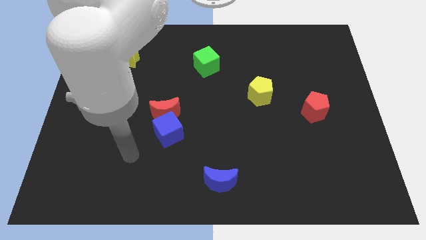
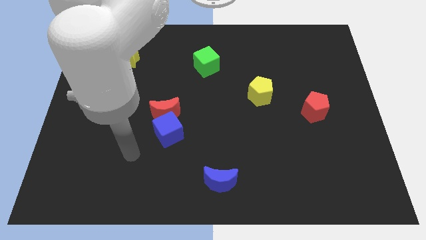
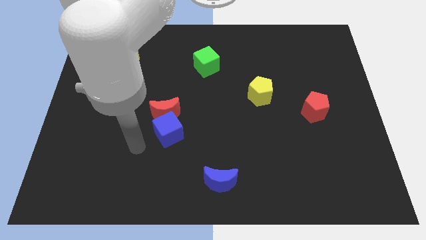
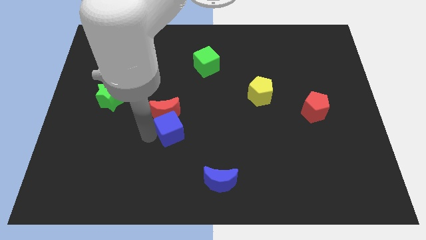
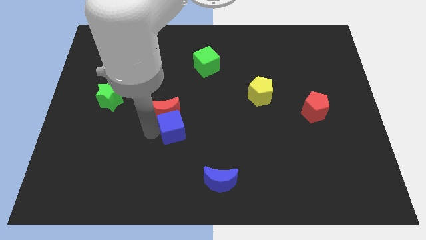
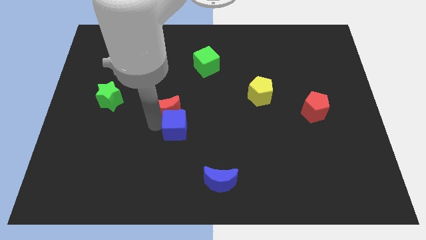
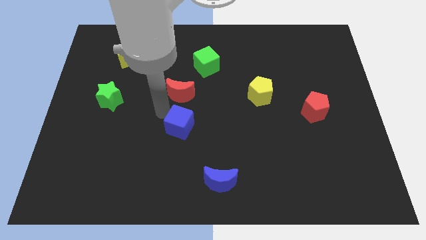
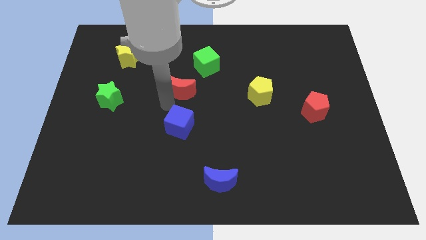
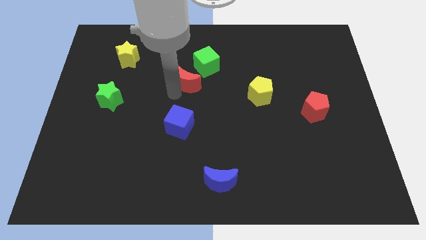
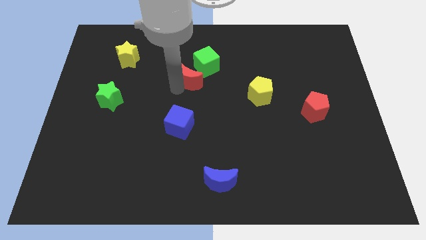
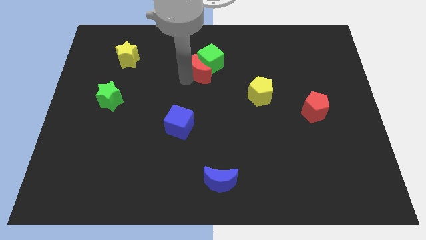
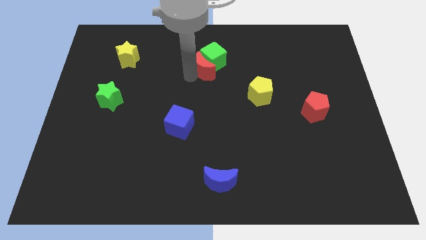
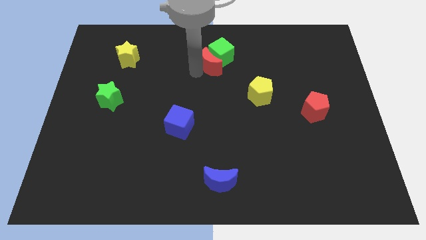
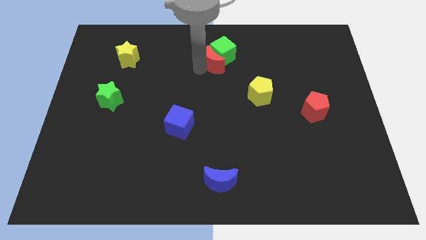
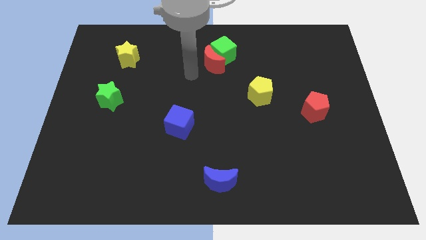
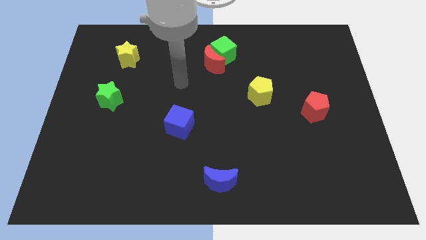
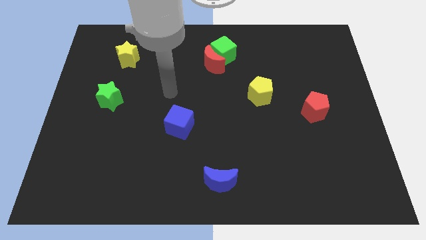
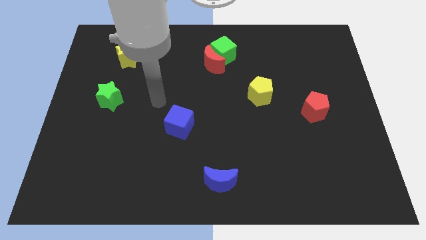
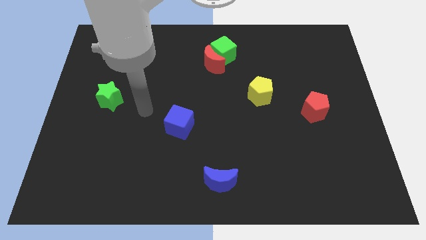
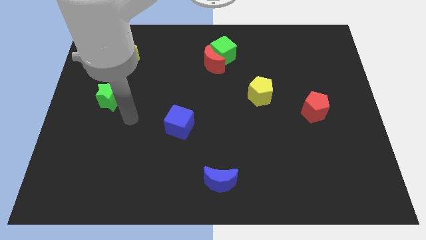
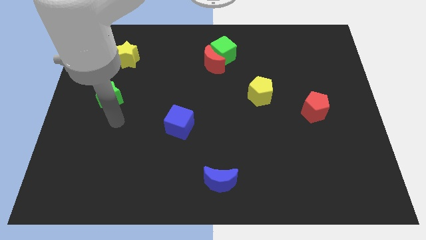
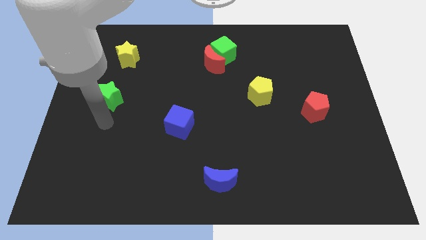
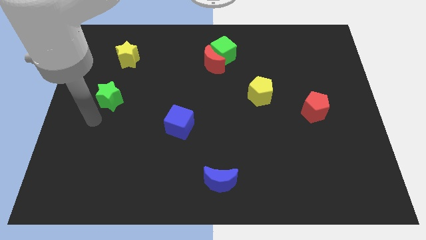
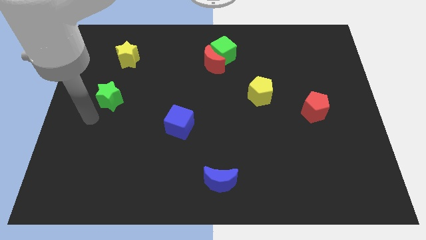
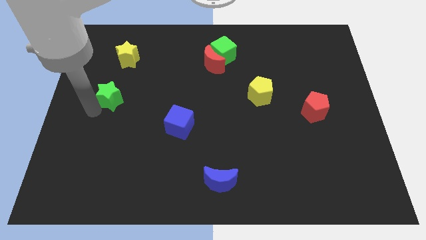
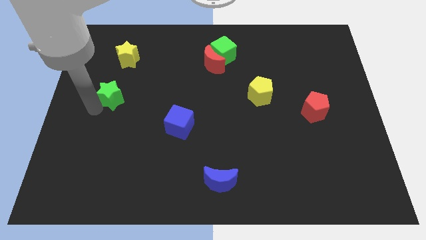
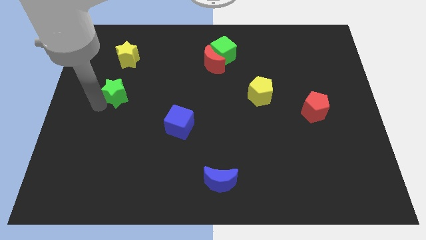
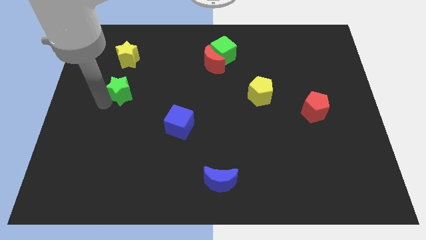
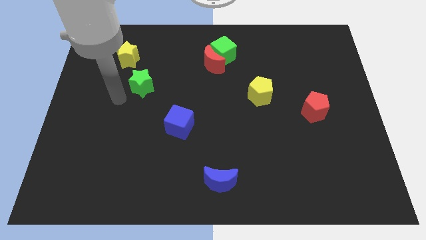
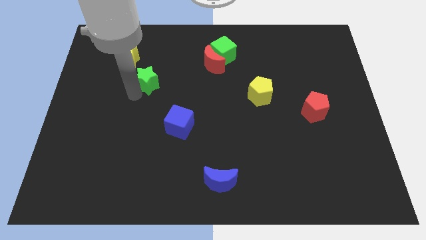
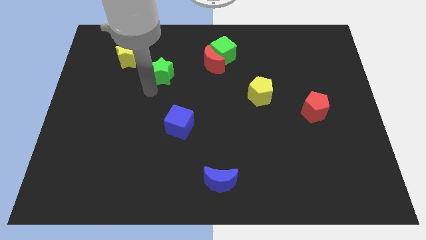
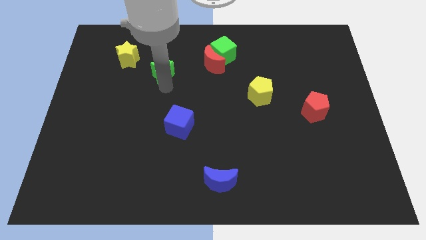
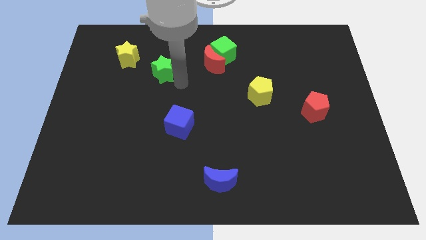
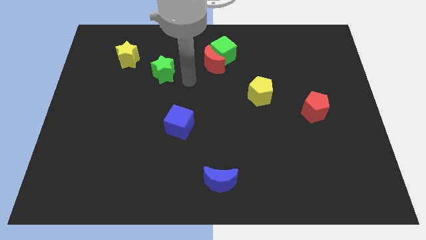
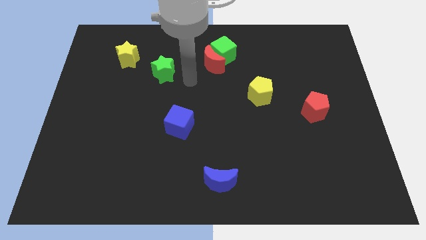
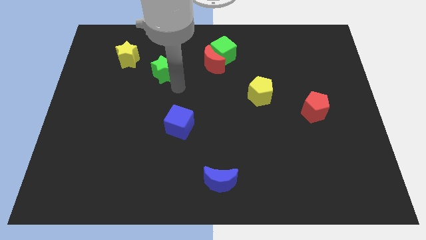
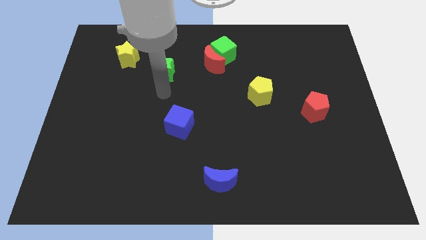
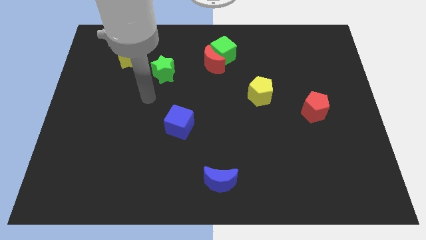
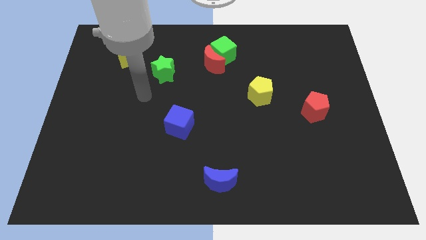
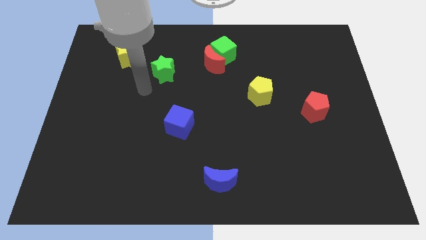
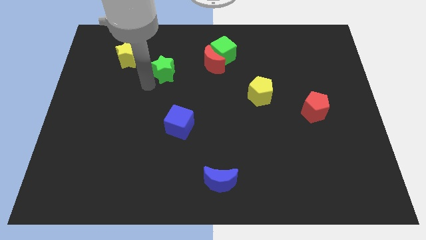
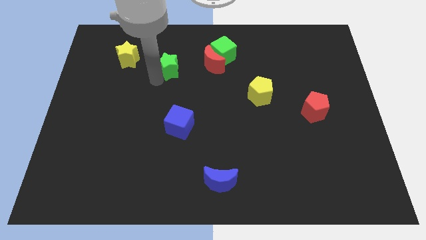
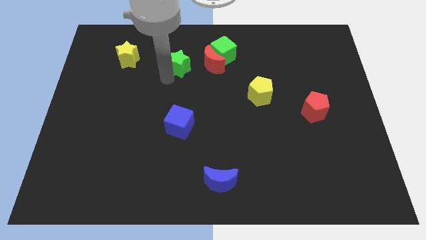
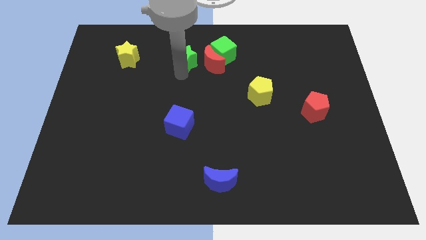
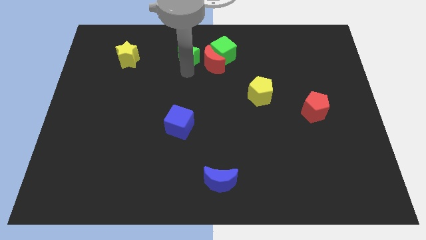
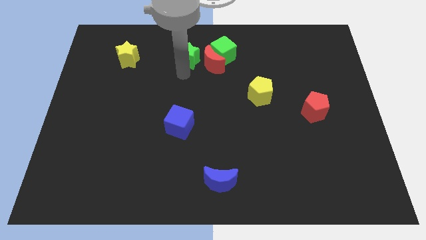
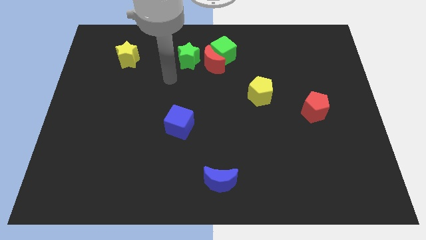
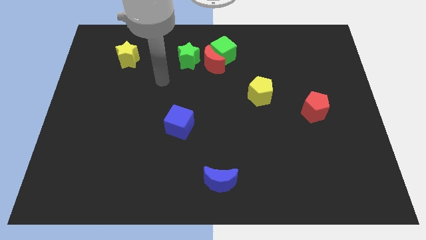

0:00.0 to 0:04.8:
move the red moon and green star to the top center

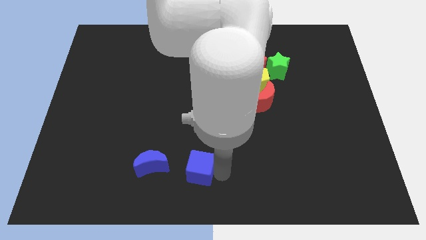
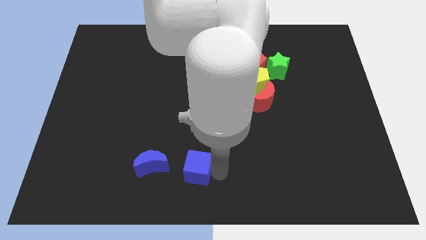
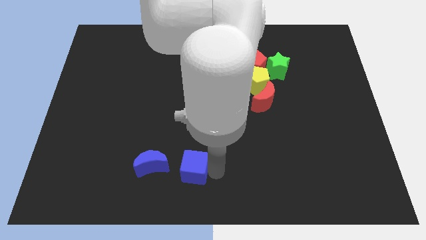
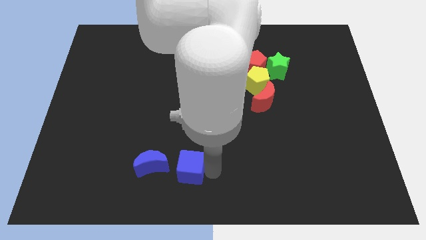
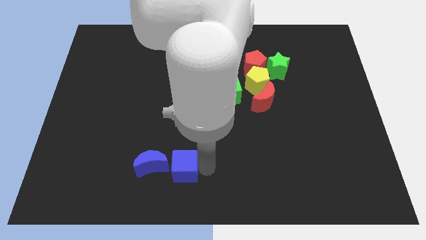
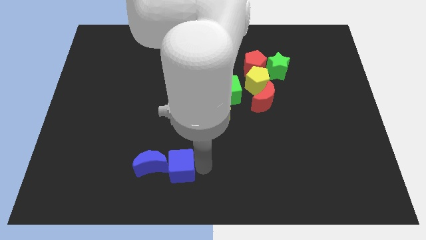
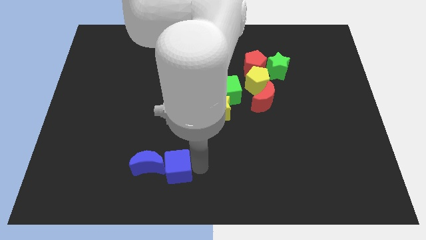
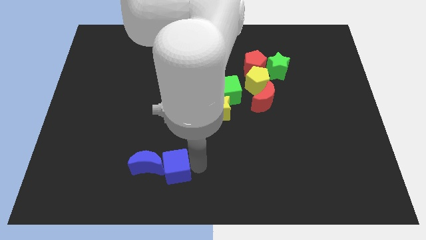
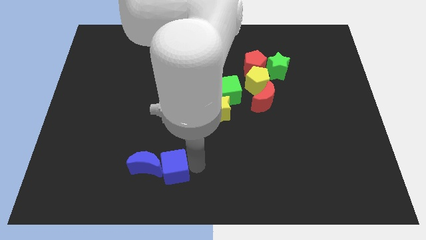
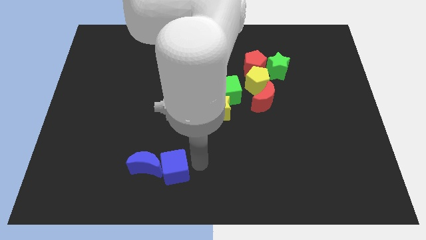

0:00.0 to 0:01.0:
move the blue cube into blue crescent

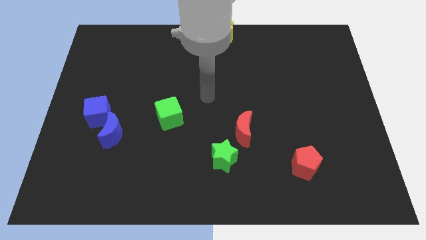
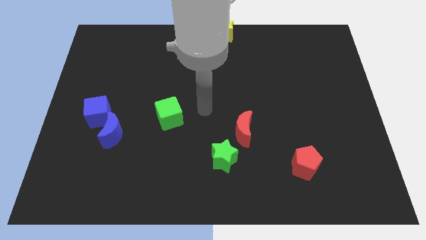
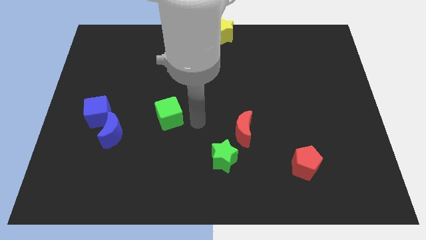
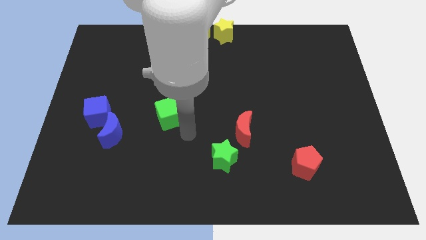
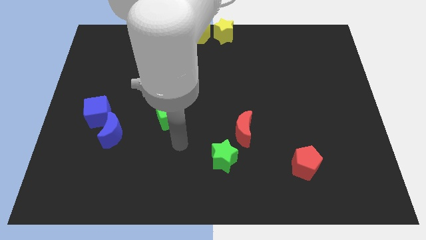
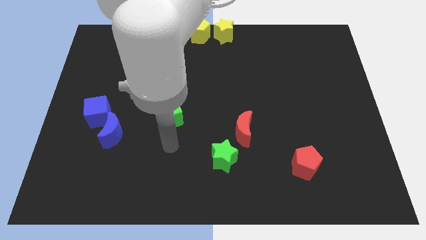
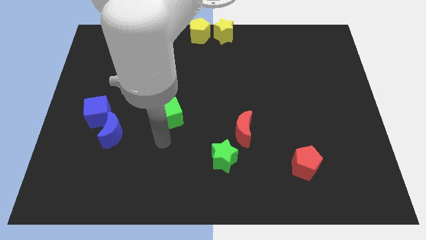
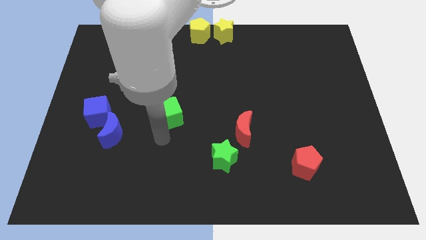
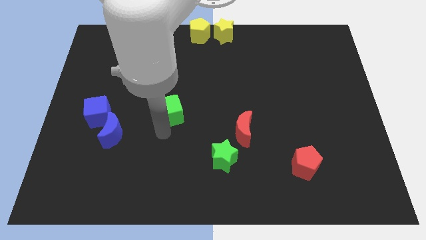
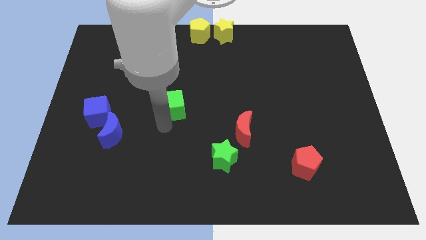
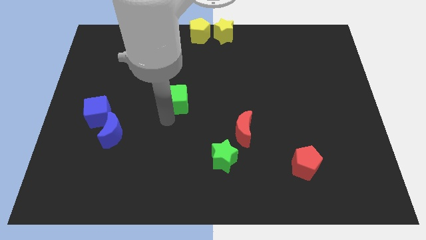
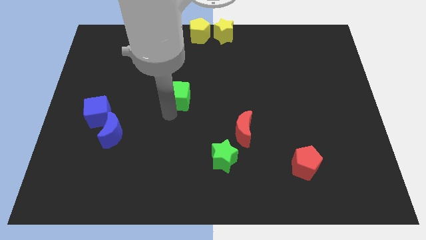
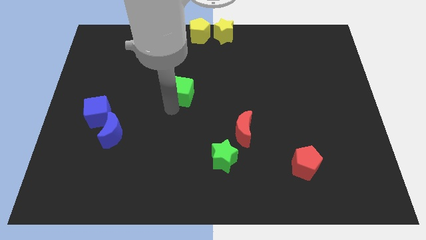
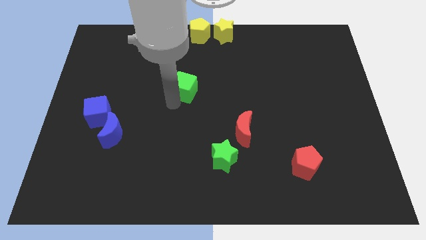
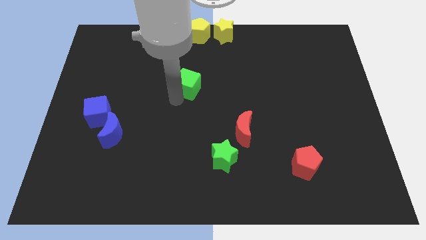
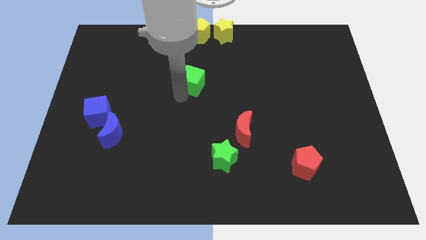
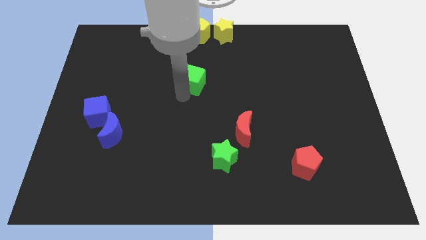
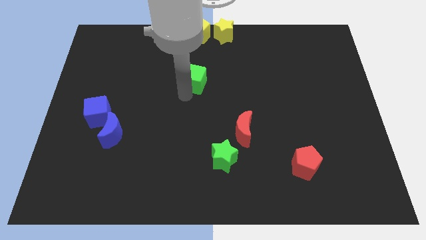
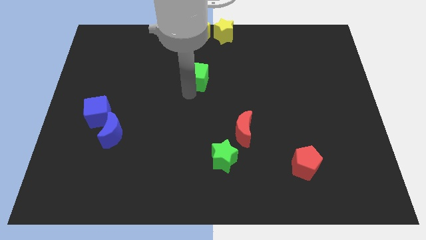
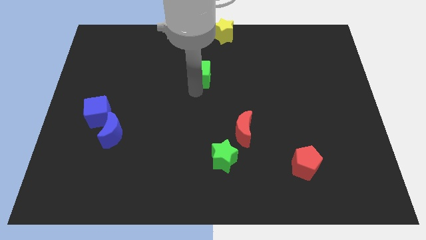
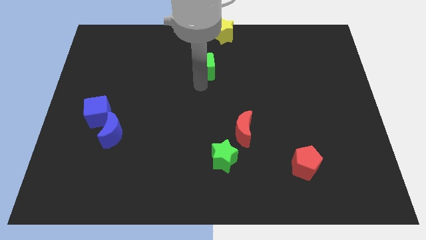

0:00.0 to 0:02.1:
push green cube towards yellow star

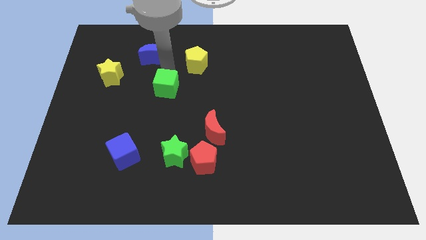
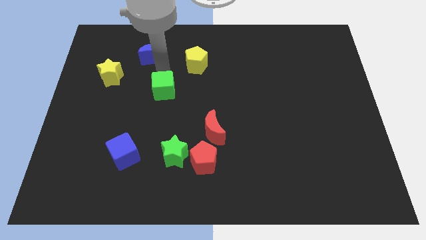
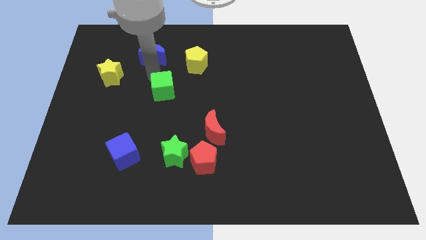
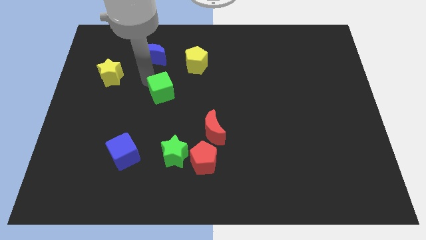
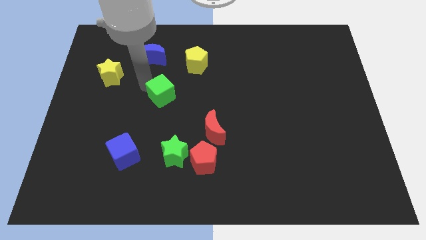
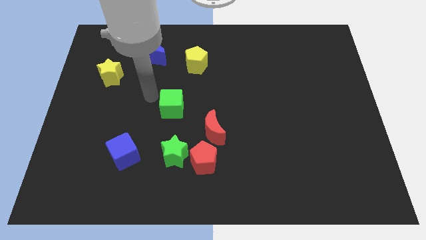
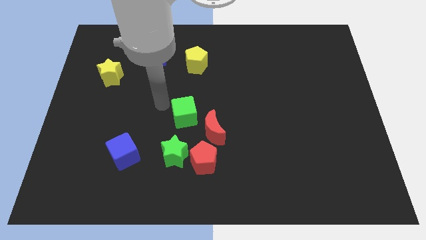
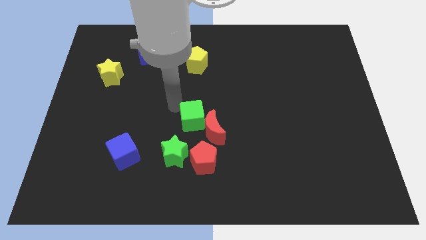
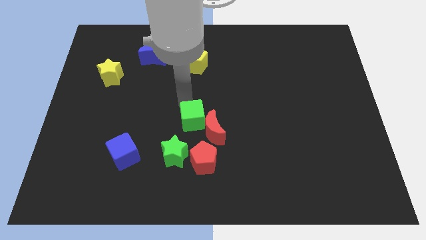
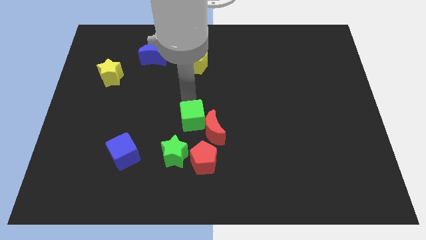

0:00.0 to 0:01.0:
move the green cube to the top left of the red moon

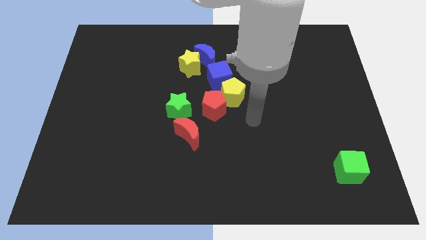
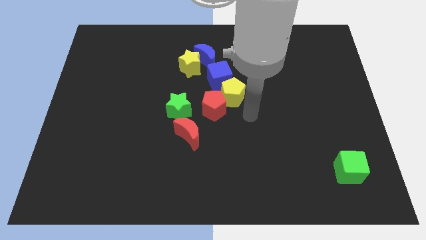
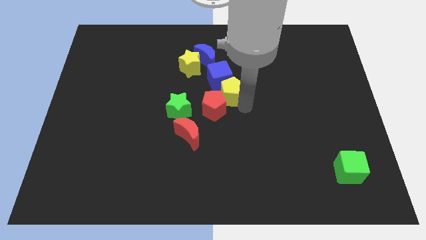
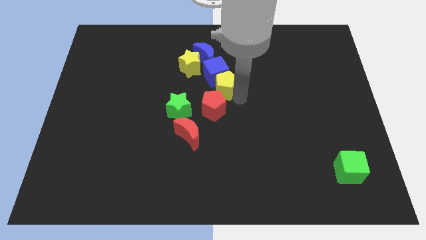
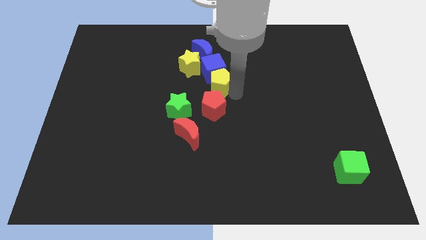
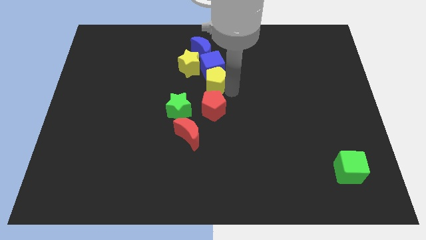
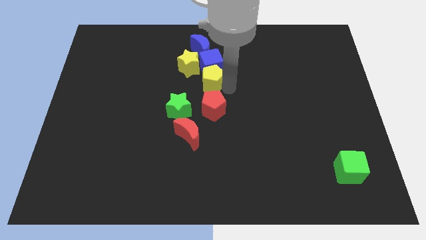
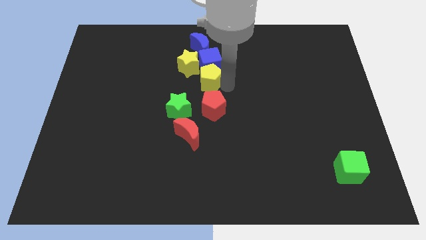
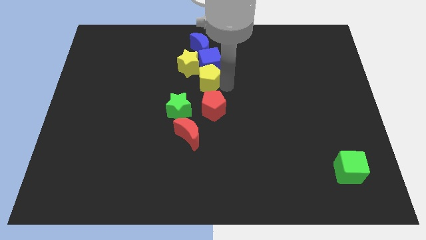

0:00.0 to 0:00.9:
place the yellow pentagon in between the blue cube and red pentagon
